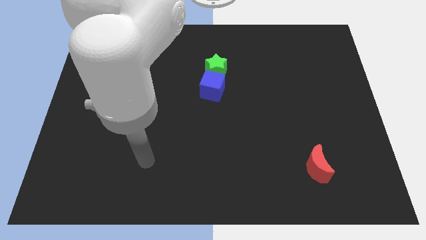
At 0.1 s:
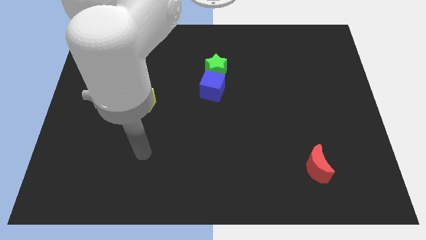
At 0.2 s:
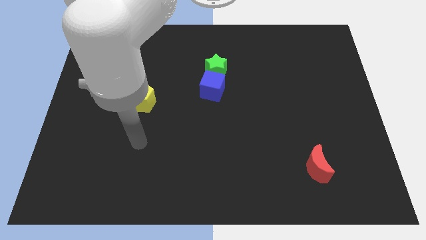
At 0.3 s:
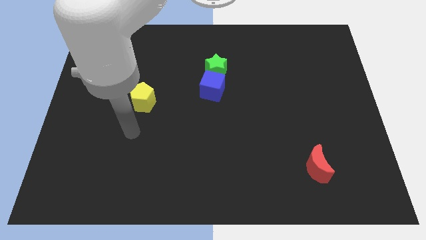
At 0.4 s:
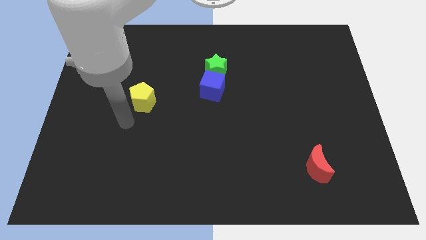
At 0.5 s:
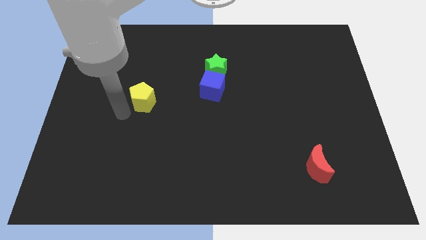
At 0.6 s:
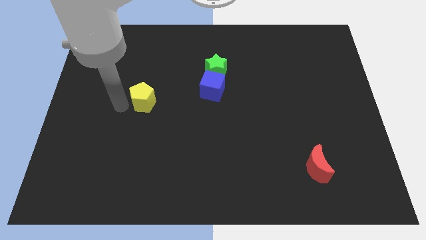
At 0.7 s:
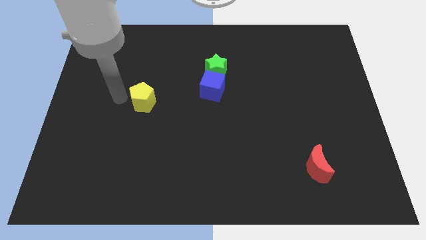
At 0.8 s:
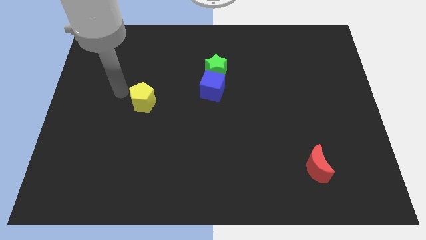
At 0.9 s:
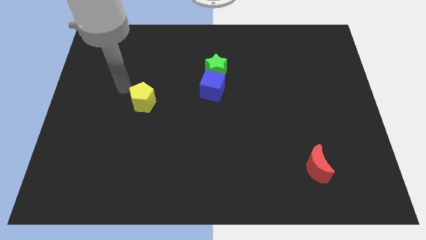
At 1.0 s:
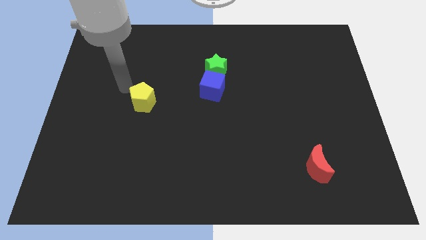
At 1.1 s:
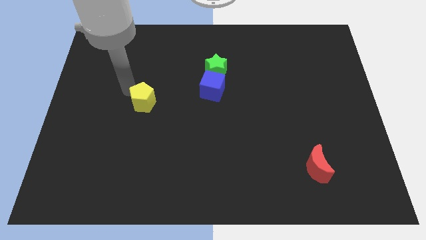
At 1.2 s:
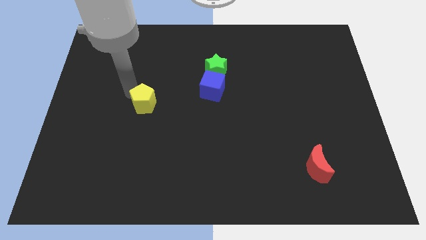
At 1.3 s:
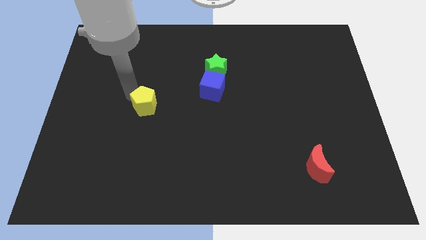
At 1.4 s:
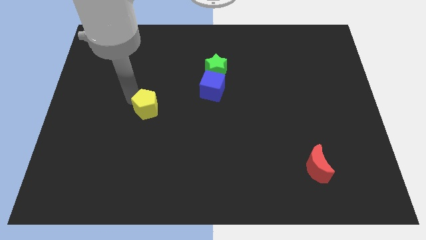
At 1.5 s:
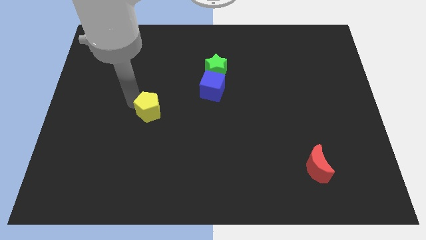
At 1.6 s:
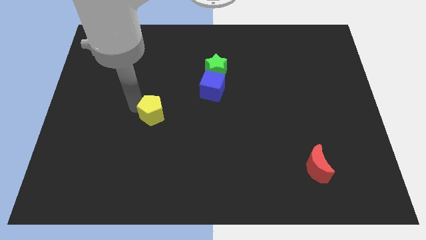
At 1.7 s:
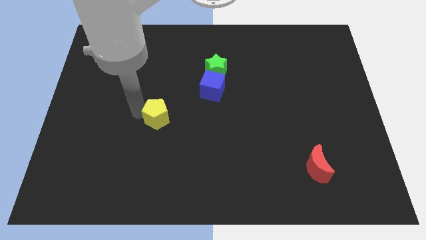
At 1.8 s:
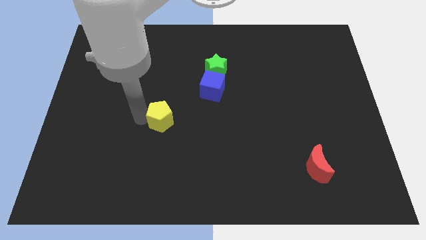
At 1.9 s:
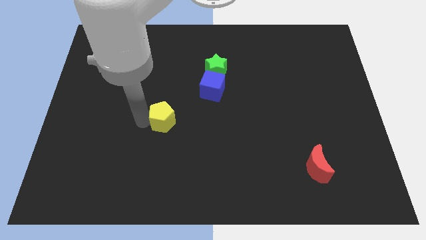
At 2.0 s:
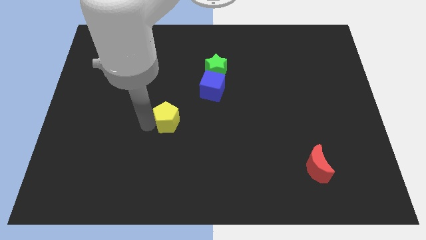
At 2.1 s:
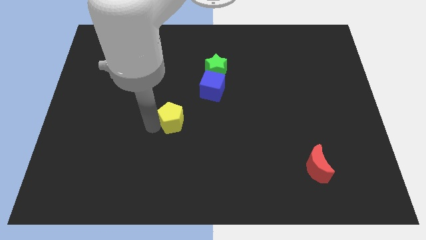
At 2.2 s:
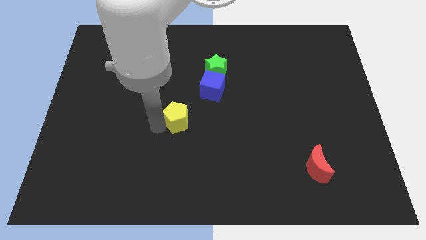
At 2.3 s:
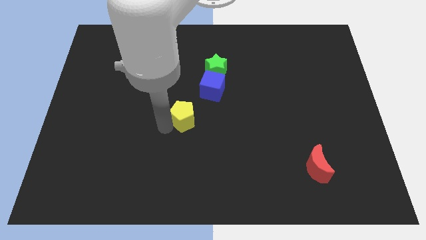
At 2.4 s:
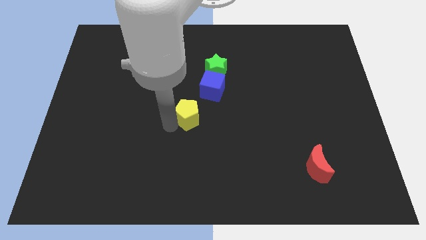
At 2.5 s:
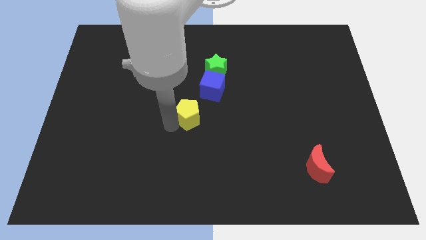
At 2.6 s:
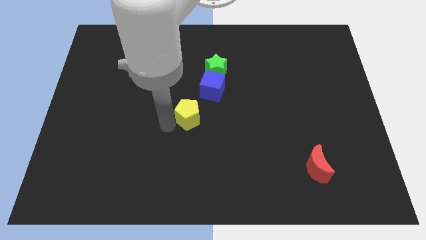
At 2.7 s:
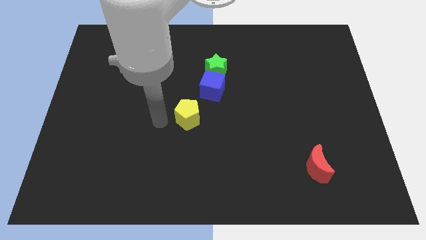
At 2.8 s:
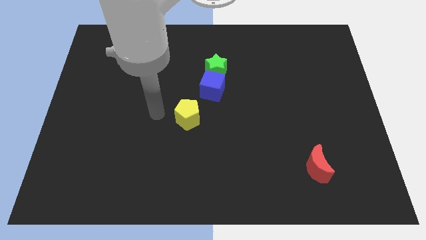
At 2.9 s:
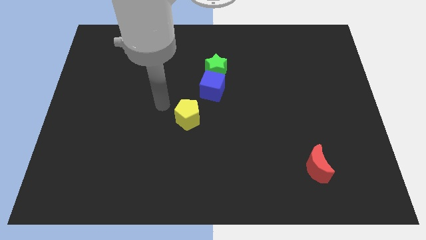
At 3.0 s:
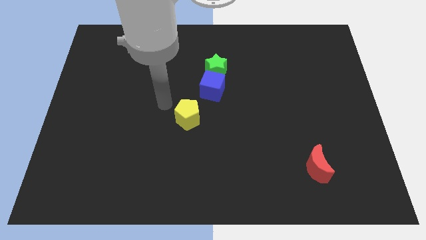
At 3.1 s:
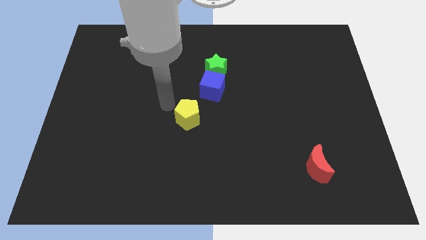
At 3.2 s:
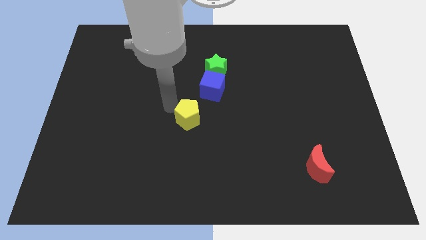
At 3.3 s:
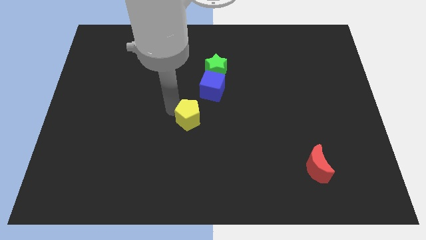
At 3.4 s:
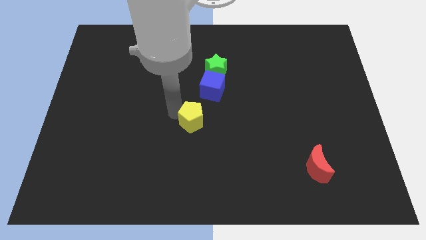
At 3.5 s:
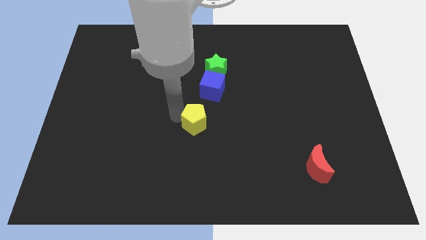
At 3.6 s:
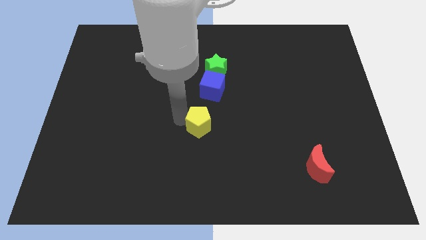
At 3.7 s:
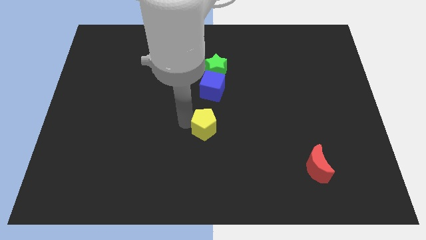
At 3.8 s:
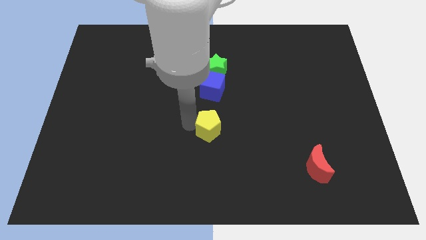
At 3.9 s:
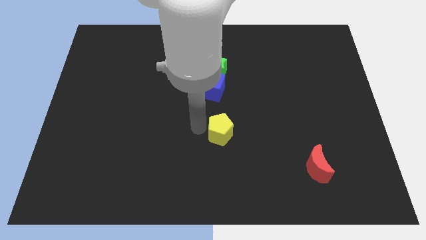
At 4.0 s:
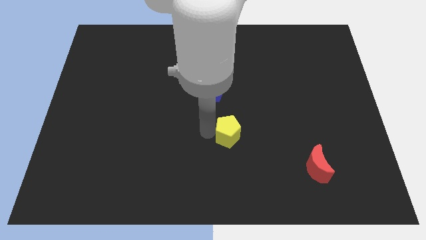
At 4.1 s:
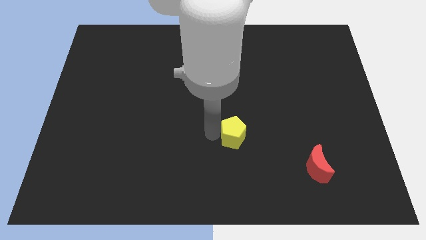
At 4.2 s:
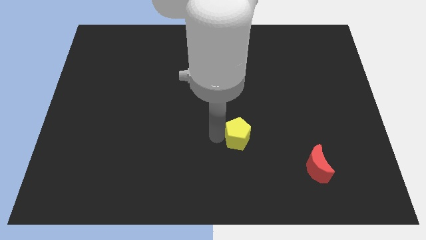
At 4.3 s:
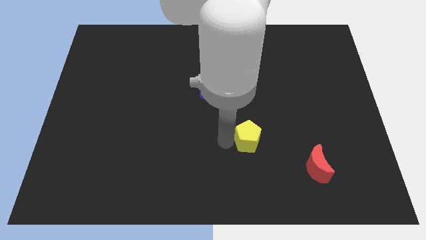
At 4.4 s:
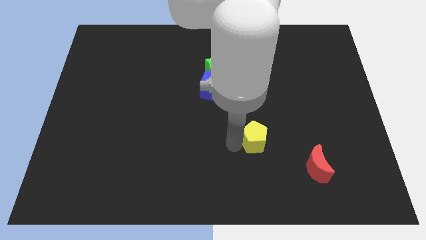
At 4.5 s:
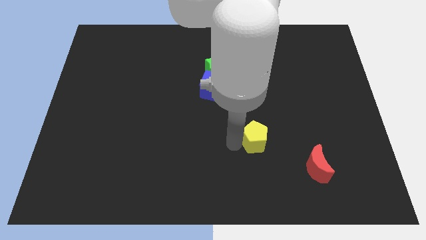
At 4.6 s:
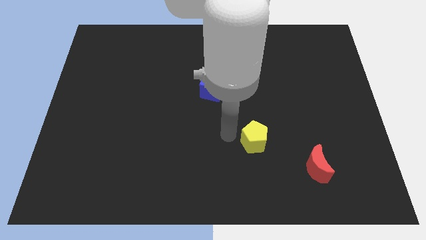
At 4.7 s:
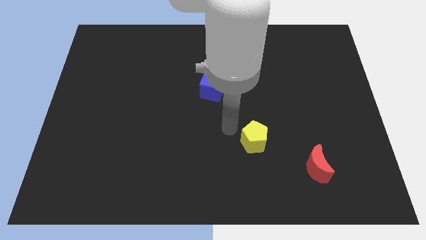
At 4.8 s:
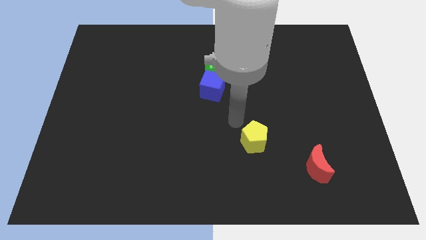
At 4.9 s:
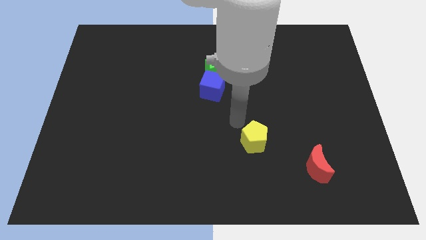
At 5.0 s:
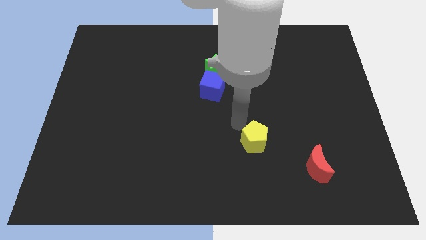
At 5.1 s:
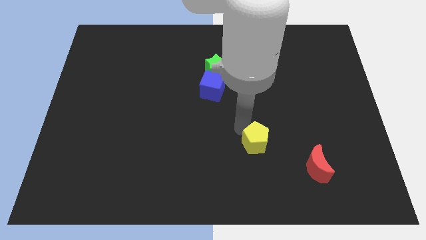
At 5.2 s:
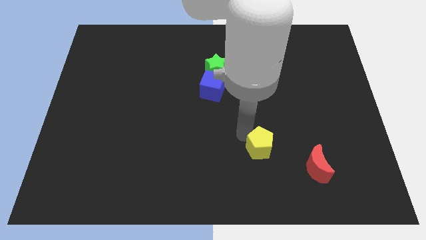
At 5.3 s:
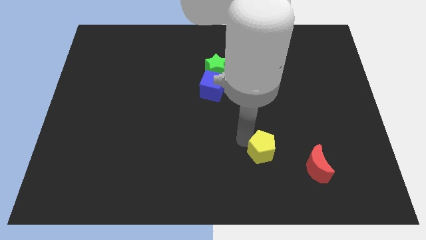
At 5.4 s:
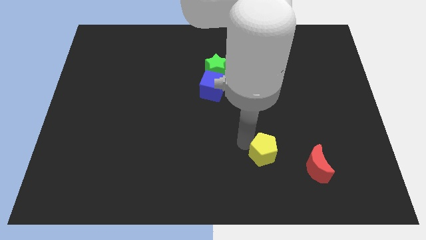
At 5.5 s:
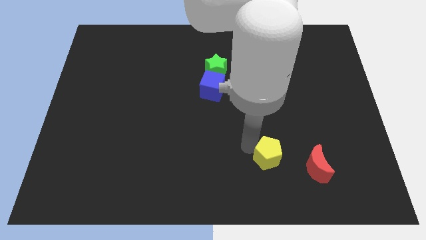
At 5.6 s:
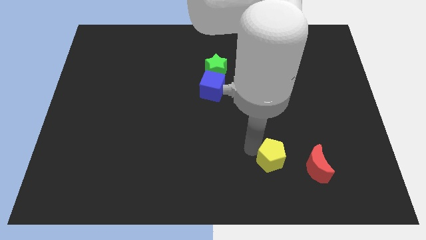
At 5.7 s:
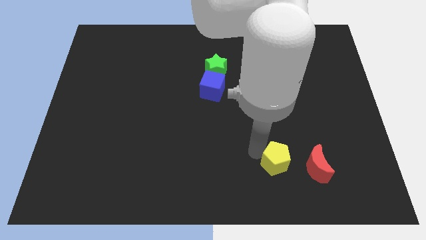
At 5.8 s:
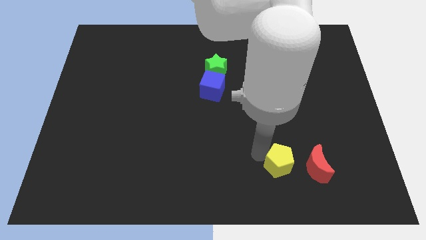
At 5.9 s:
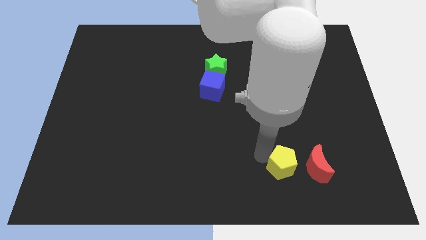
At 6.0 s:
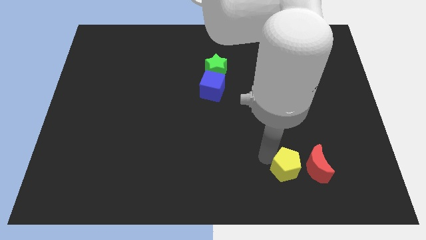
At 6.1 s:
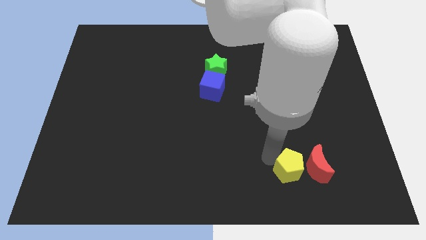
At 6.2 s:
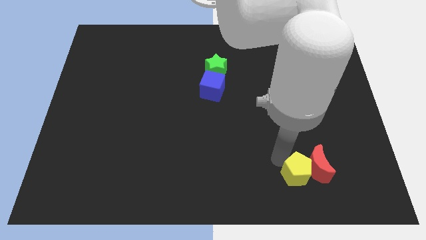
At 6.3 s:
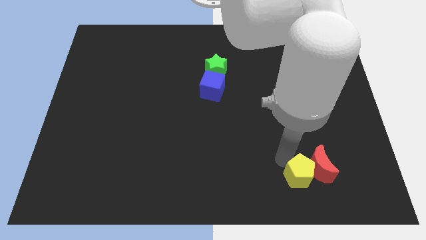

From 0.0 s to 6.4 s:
move the yellow pentagon next to the moon

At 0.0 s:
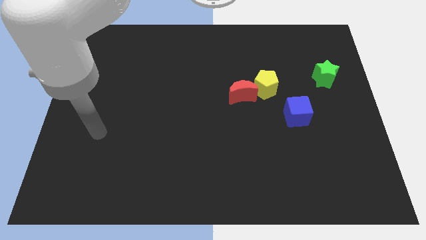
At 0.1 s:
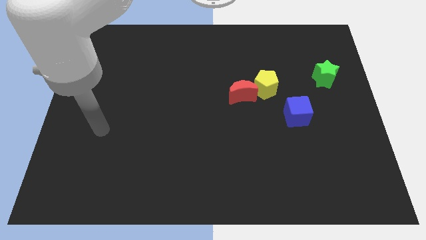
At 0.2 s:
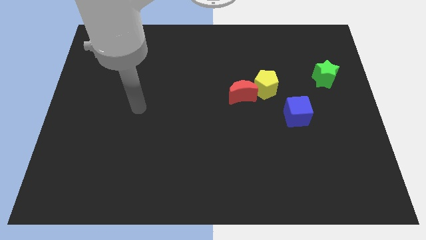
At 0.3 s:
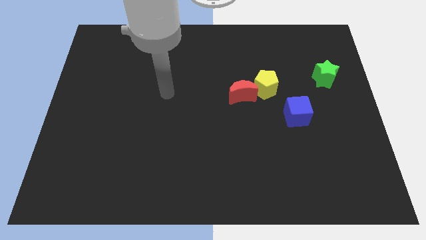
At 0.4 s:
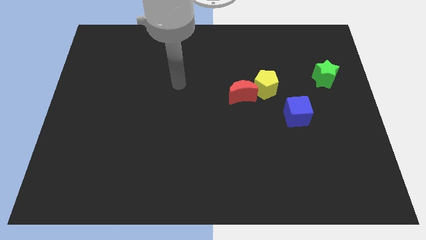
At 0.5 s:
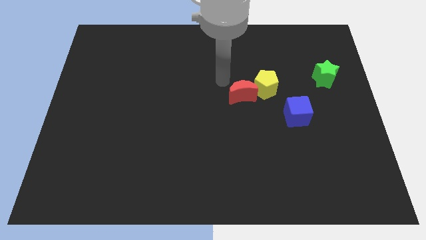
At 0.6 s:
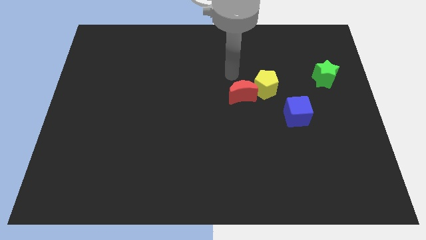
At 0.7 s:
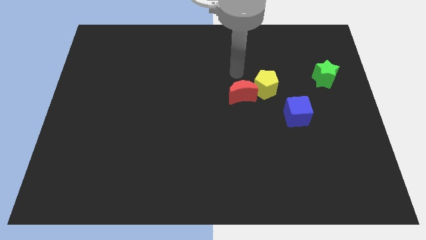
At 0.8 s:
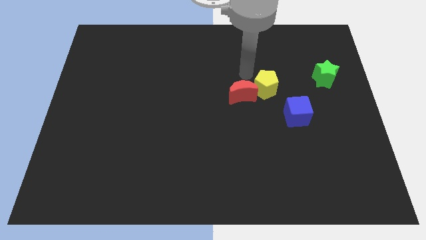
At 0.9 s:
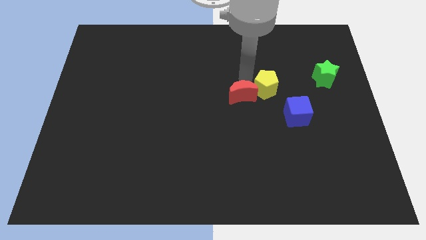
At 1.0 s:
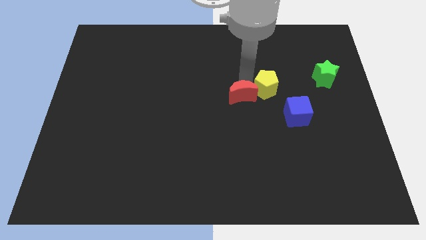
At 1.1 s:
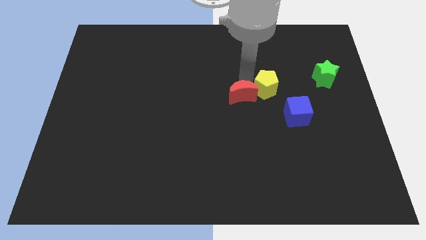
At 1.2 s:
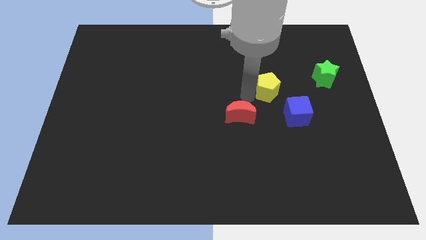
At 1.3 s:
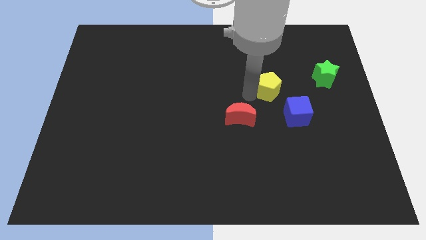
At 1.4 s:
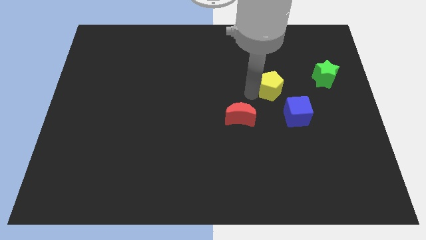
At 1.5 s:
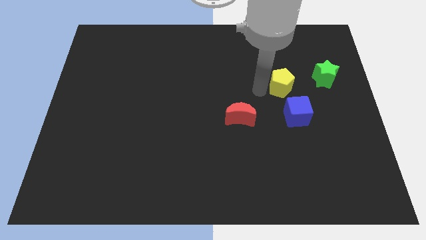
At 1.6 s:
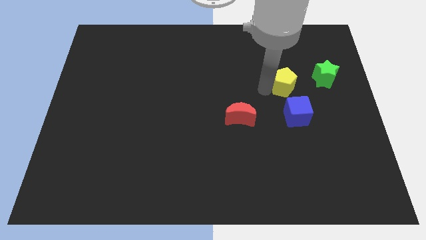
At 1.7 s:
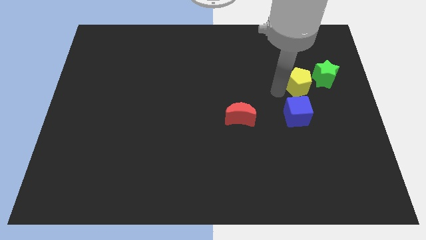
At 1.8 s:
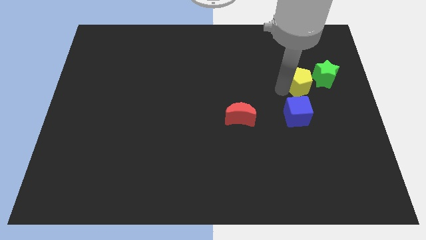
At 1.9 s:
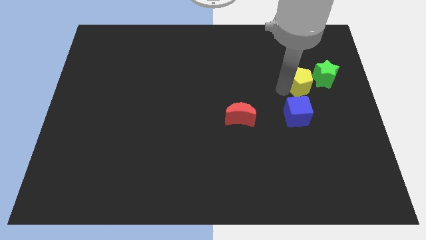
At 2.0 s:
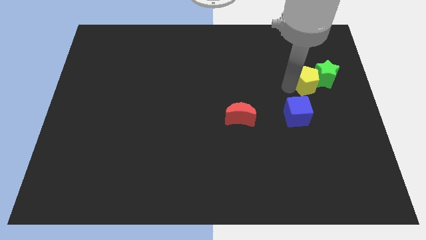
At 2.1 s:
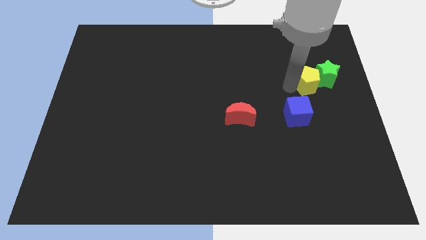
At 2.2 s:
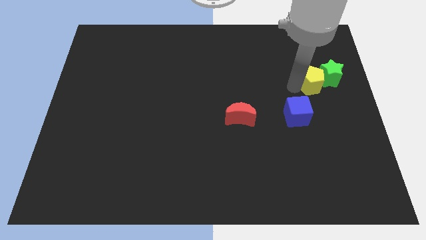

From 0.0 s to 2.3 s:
slide the pentagon towards the green star

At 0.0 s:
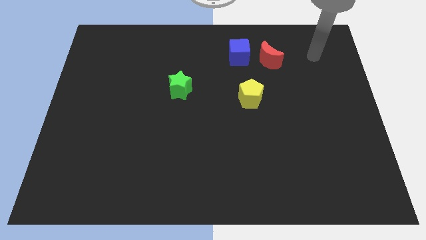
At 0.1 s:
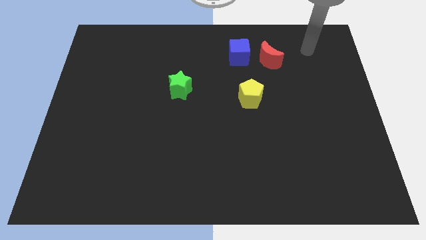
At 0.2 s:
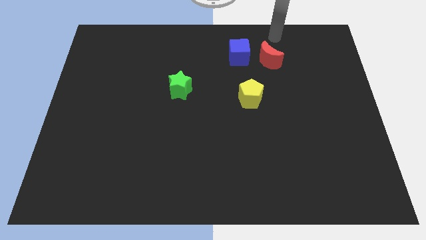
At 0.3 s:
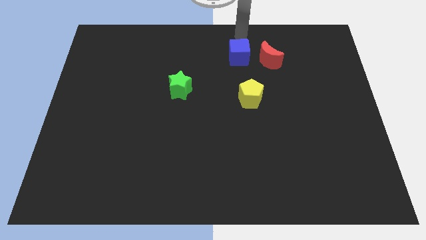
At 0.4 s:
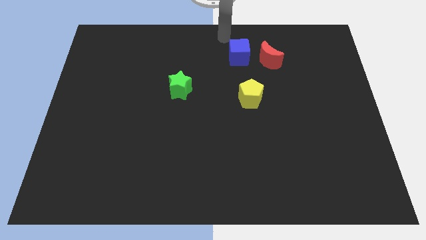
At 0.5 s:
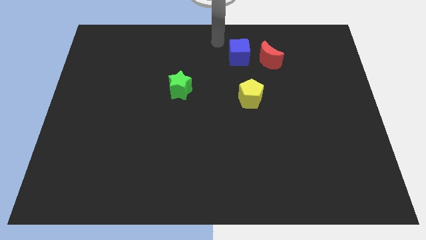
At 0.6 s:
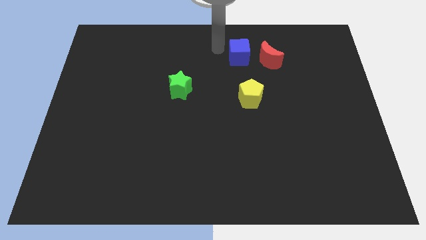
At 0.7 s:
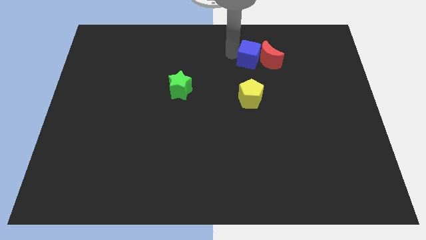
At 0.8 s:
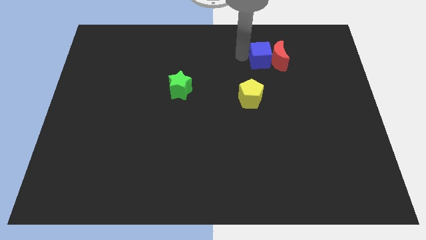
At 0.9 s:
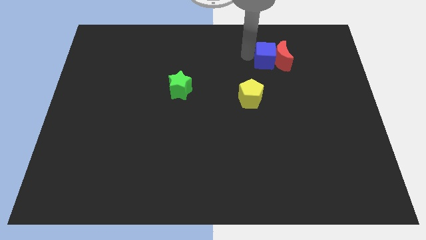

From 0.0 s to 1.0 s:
move the blue block towards the moon
